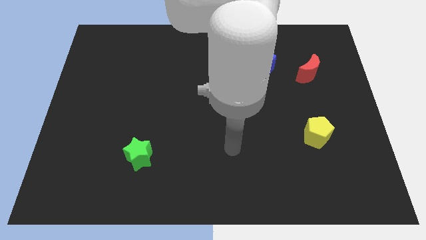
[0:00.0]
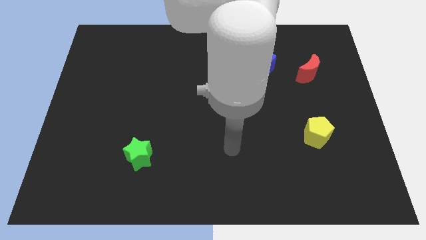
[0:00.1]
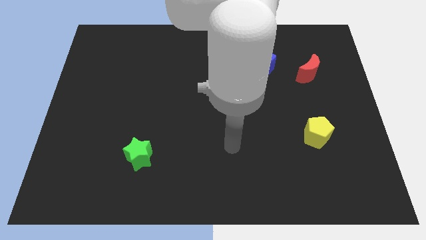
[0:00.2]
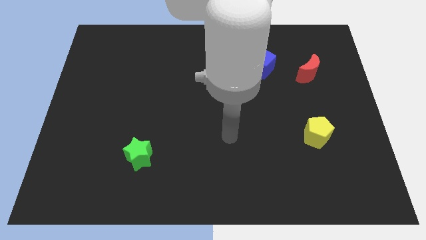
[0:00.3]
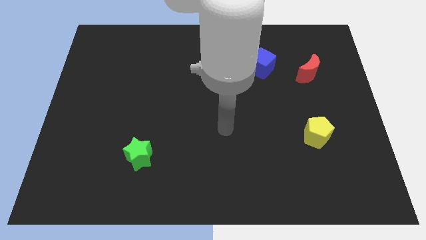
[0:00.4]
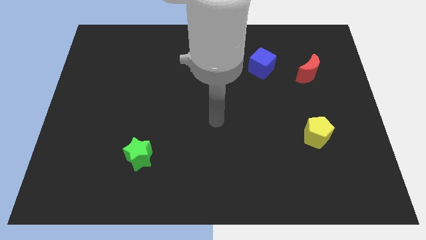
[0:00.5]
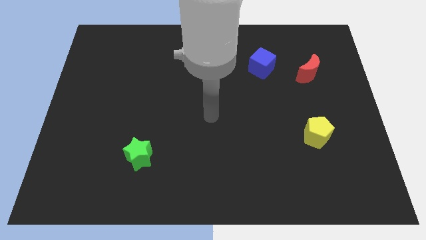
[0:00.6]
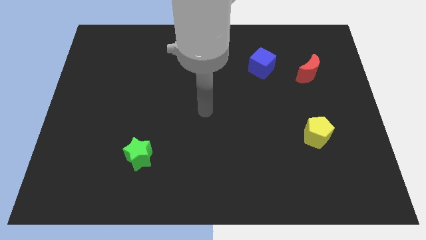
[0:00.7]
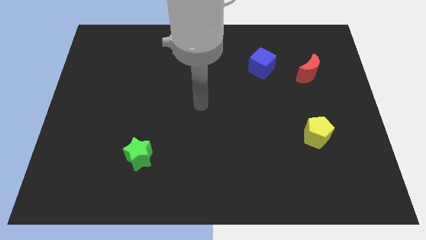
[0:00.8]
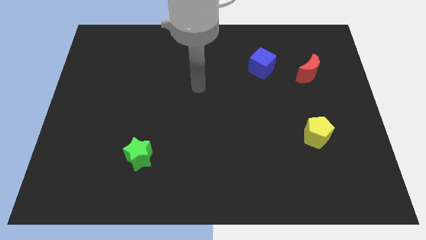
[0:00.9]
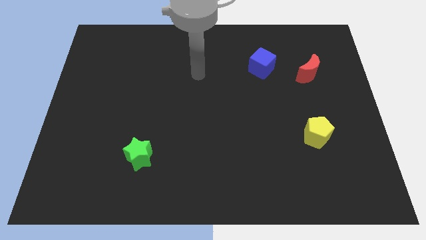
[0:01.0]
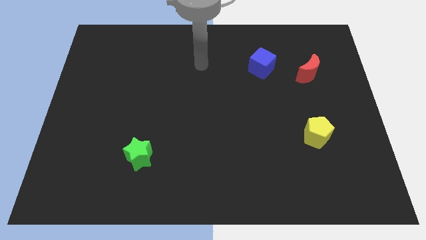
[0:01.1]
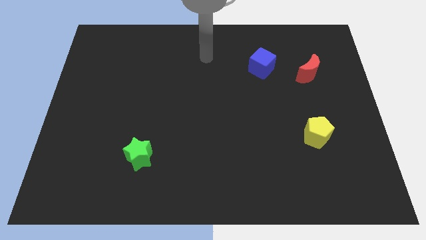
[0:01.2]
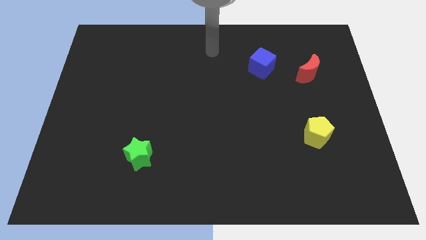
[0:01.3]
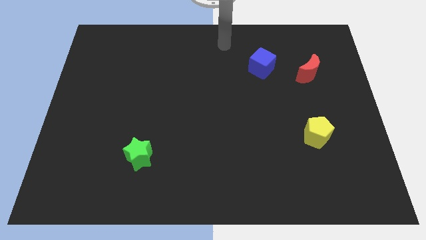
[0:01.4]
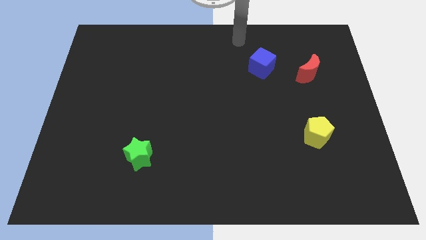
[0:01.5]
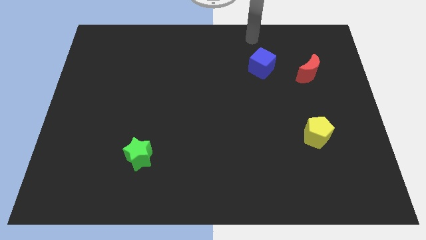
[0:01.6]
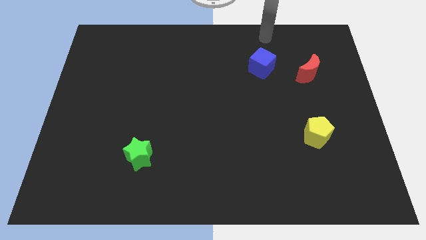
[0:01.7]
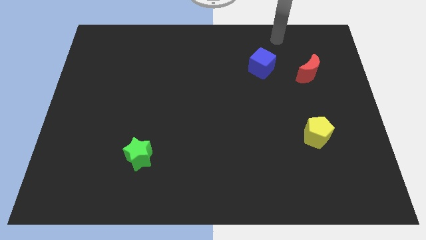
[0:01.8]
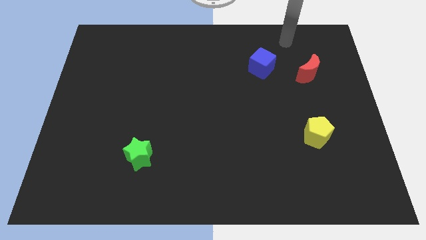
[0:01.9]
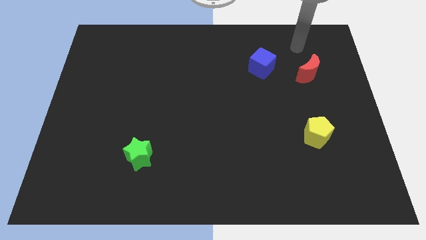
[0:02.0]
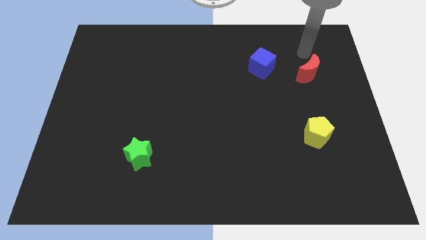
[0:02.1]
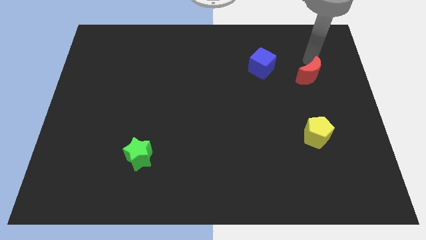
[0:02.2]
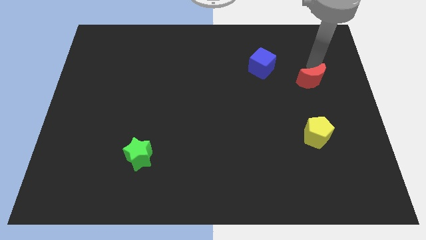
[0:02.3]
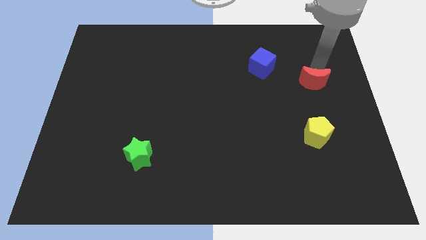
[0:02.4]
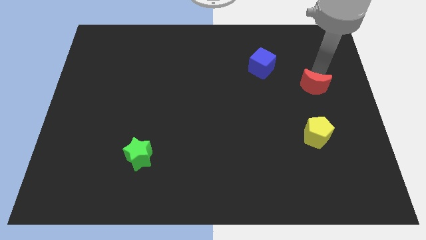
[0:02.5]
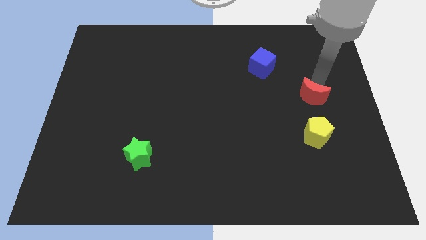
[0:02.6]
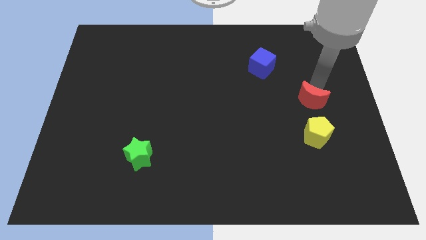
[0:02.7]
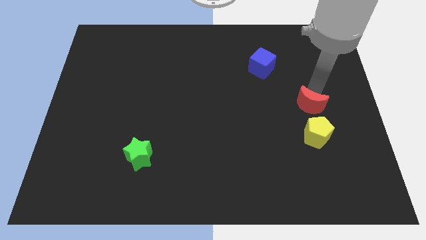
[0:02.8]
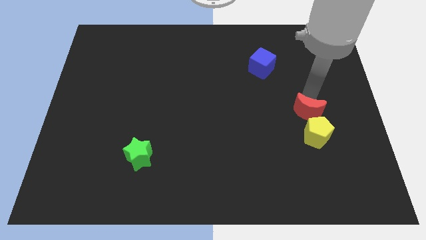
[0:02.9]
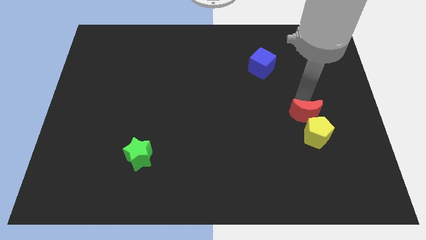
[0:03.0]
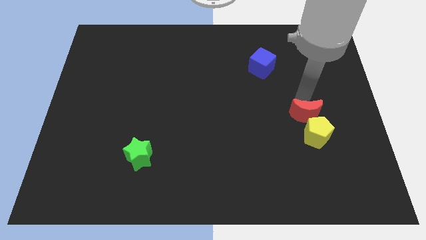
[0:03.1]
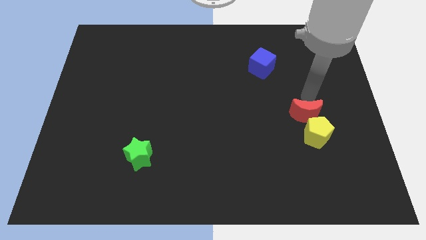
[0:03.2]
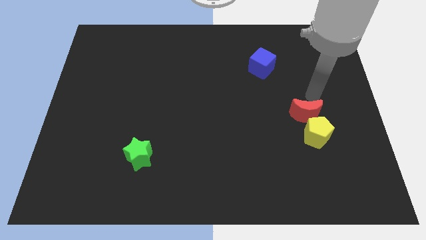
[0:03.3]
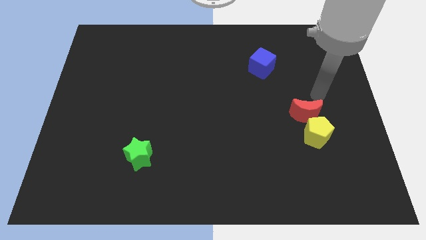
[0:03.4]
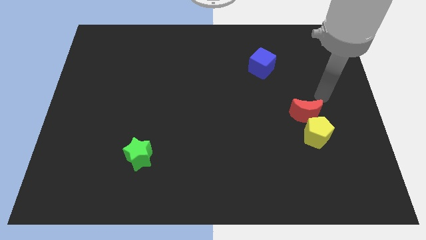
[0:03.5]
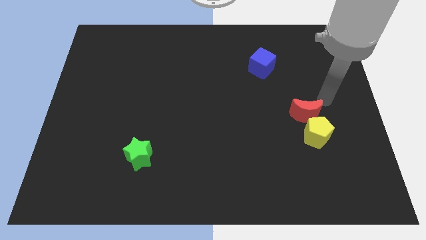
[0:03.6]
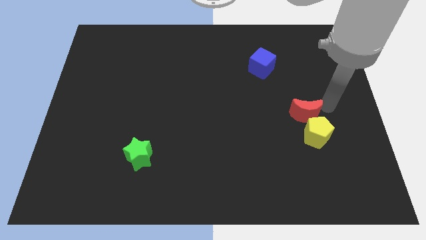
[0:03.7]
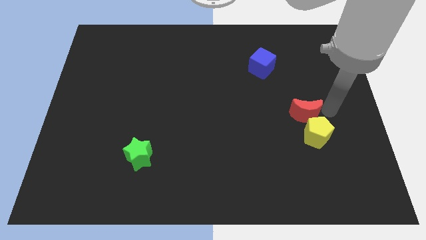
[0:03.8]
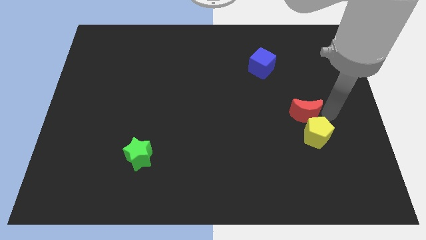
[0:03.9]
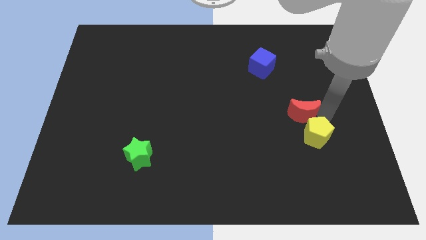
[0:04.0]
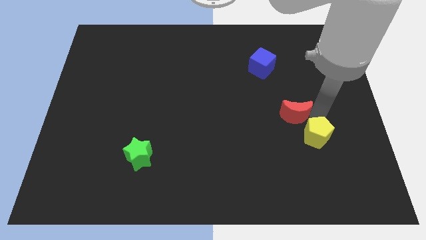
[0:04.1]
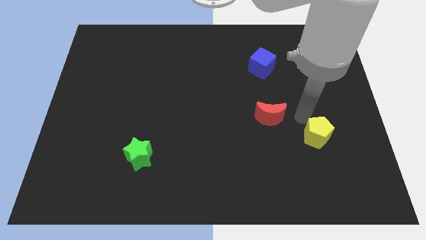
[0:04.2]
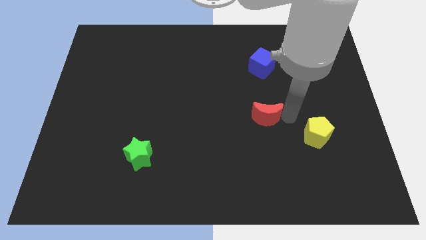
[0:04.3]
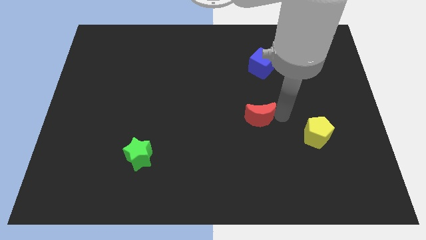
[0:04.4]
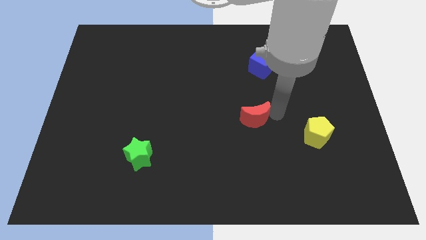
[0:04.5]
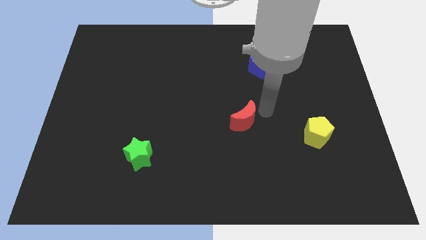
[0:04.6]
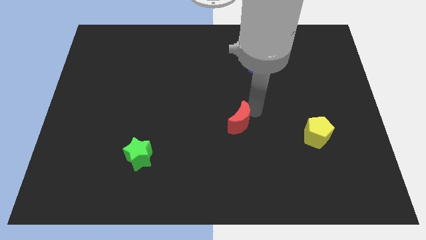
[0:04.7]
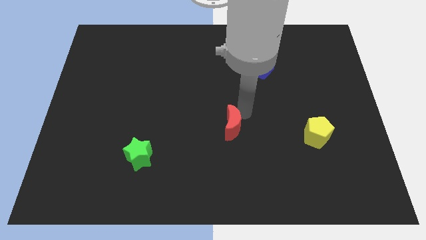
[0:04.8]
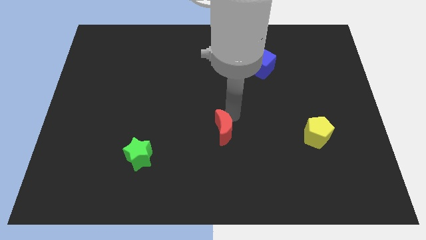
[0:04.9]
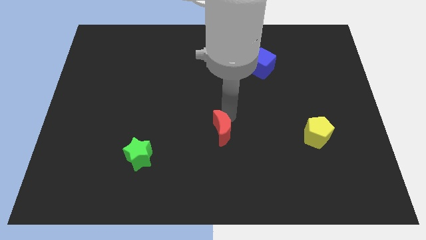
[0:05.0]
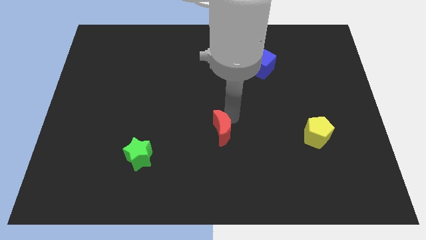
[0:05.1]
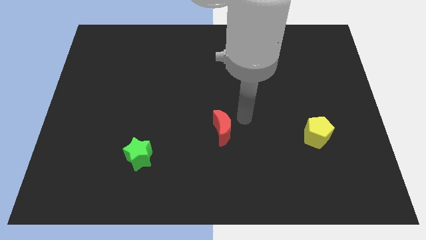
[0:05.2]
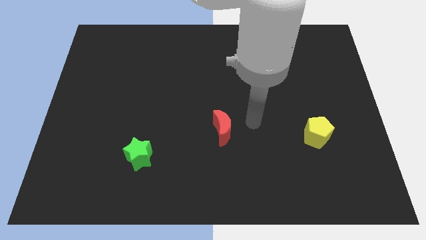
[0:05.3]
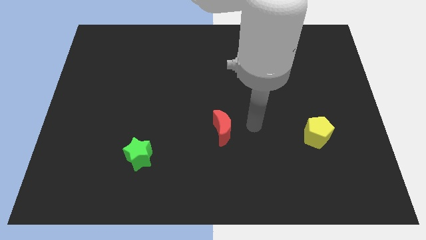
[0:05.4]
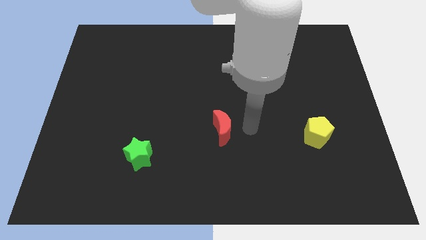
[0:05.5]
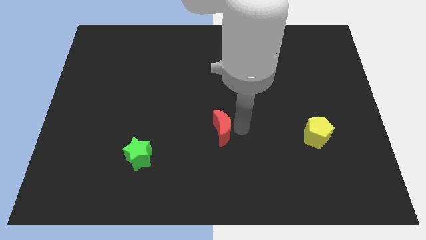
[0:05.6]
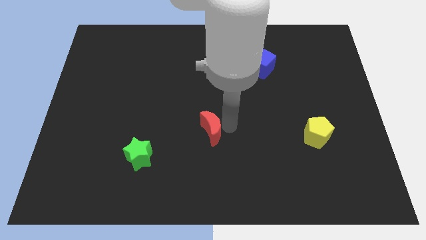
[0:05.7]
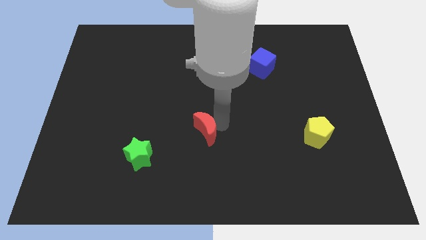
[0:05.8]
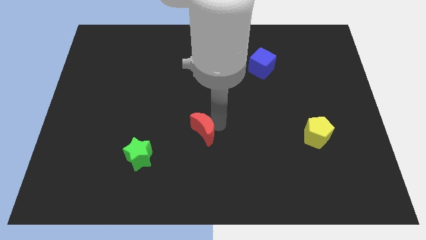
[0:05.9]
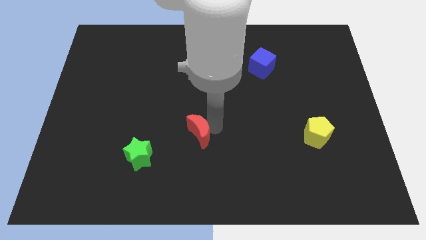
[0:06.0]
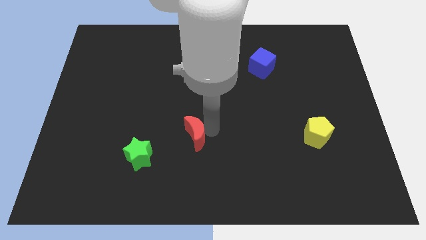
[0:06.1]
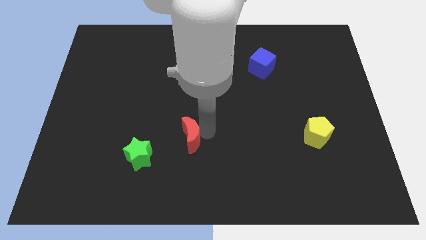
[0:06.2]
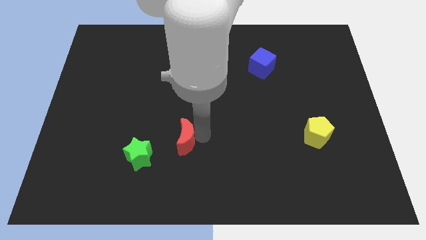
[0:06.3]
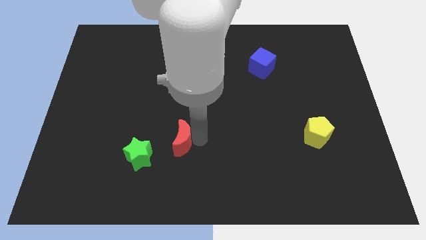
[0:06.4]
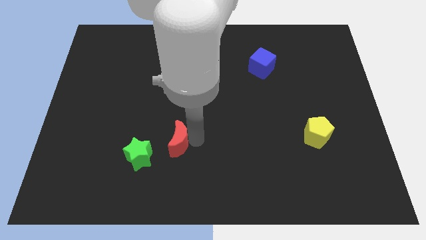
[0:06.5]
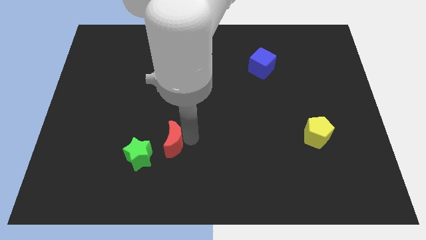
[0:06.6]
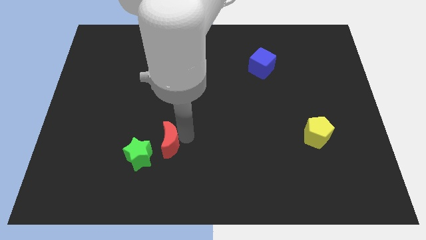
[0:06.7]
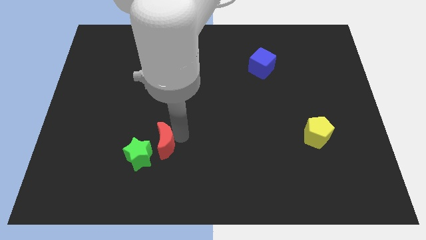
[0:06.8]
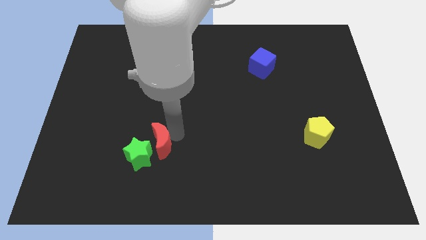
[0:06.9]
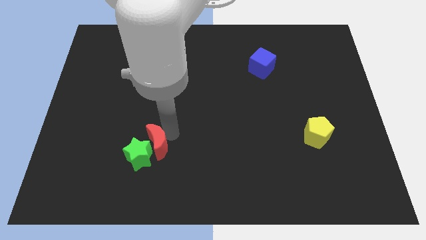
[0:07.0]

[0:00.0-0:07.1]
move the red block next to the green block

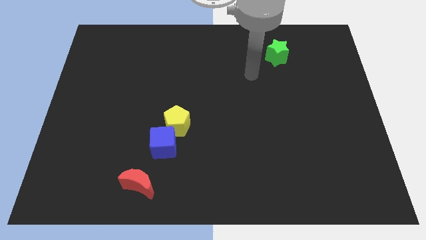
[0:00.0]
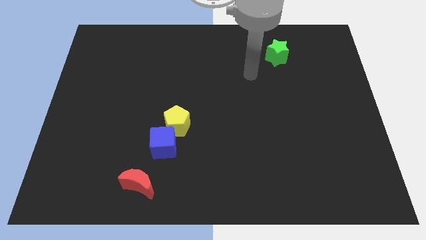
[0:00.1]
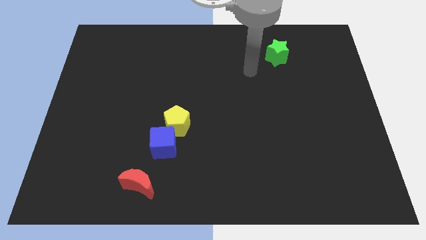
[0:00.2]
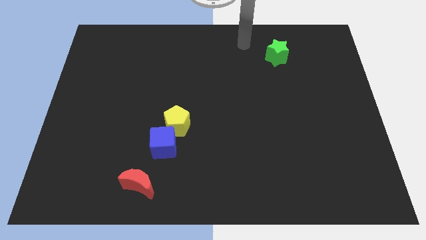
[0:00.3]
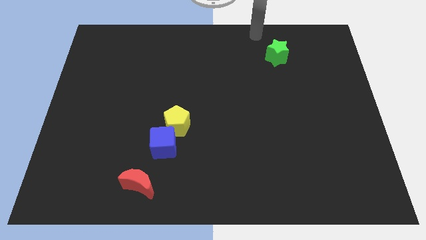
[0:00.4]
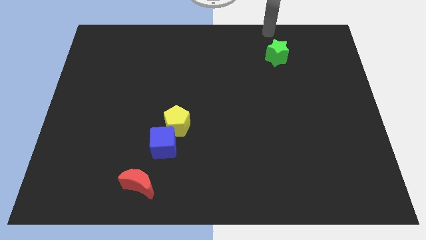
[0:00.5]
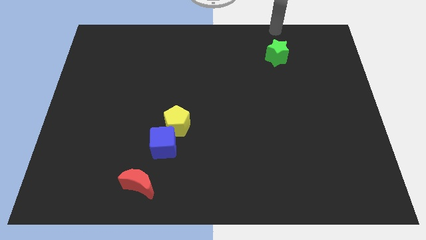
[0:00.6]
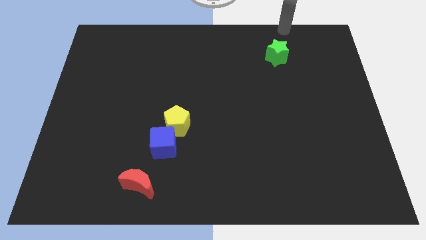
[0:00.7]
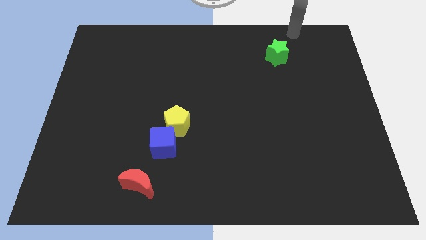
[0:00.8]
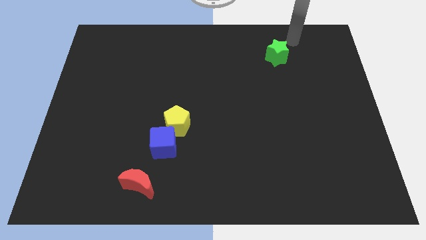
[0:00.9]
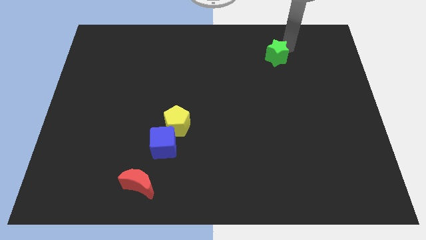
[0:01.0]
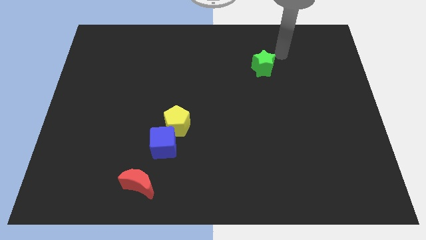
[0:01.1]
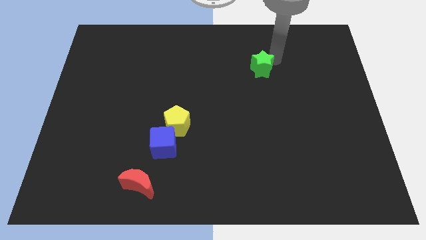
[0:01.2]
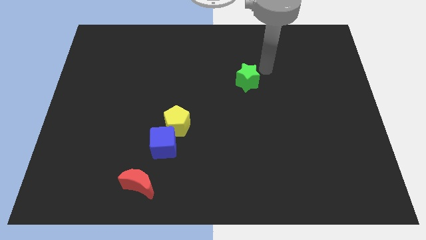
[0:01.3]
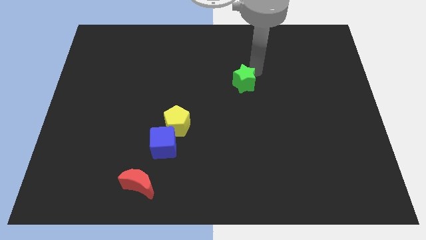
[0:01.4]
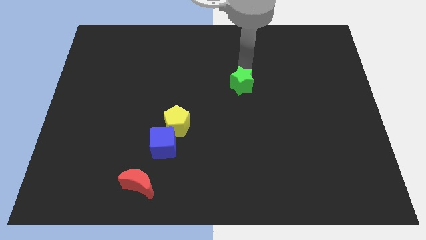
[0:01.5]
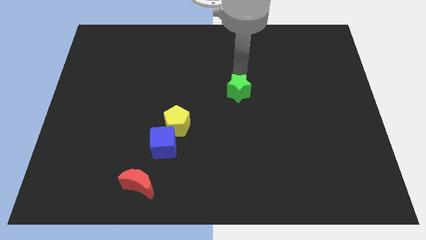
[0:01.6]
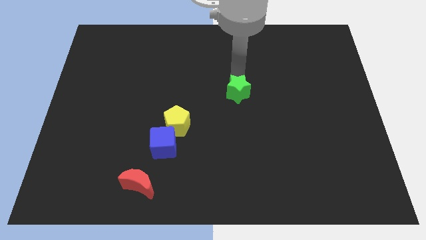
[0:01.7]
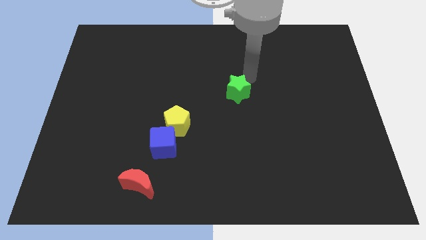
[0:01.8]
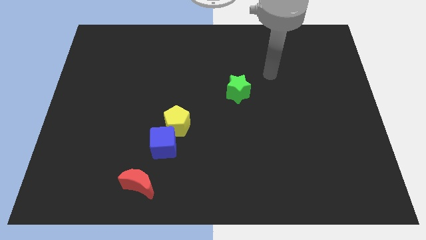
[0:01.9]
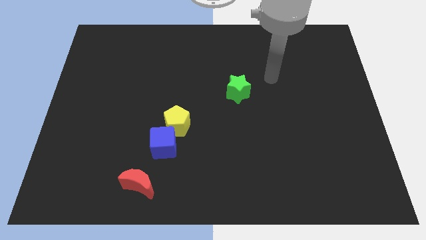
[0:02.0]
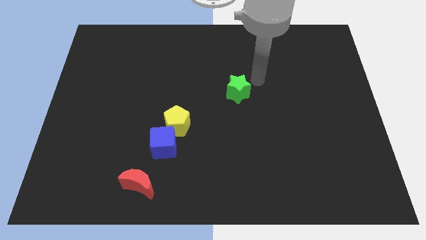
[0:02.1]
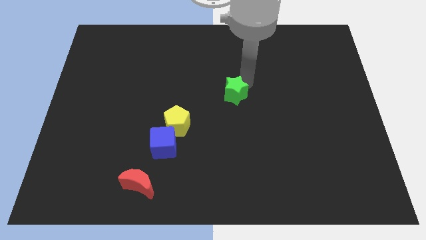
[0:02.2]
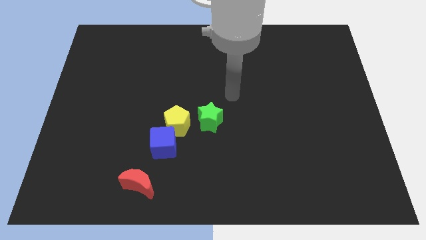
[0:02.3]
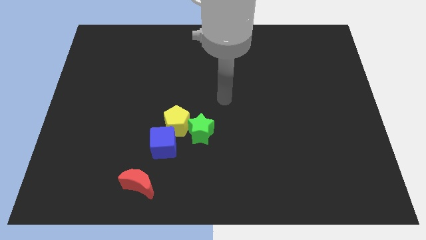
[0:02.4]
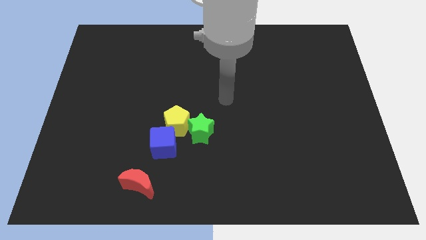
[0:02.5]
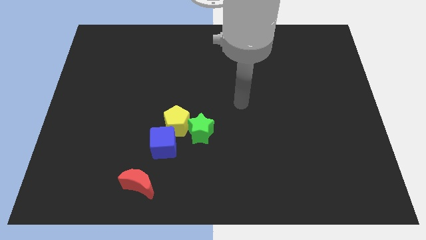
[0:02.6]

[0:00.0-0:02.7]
slide the green block towards the yellow block
